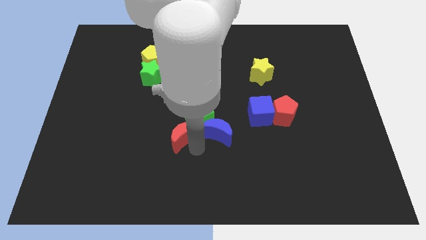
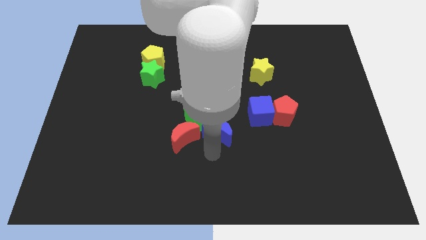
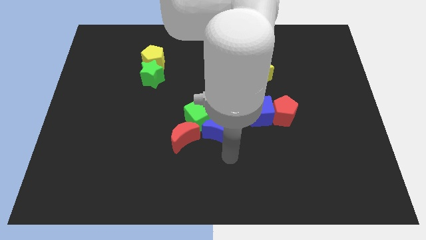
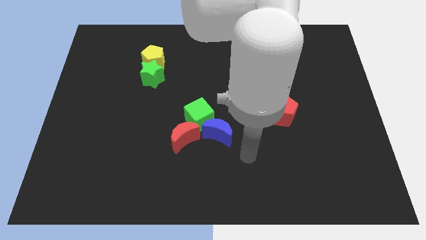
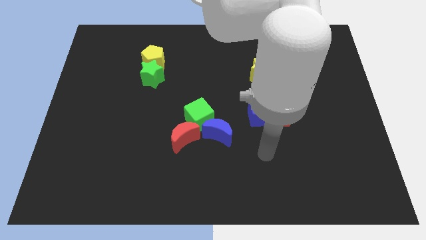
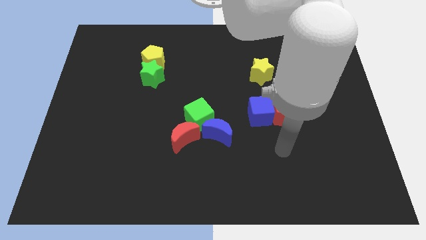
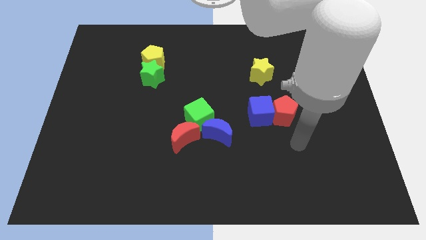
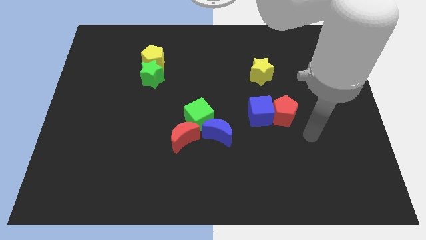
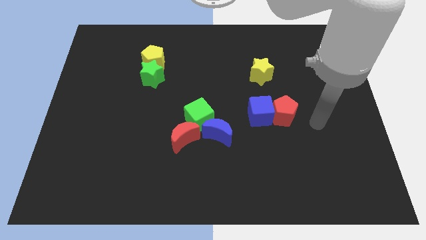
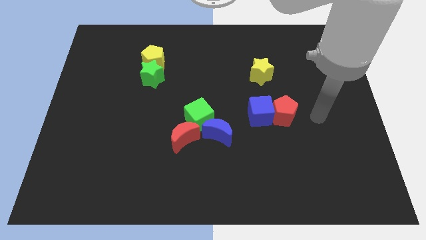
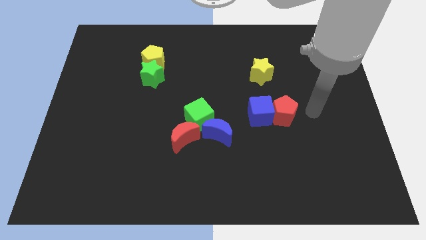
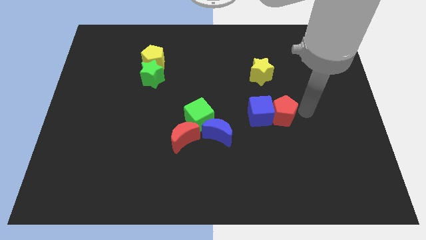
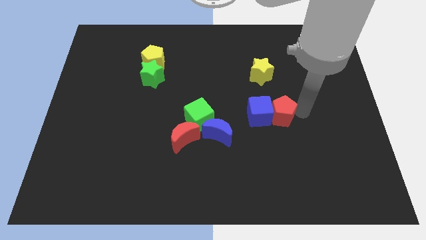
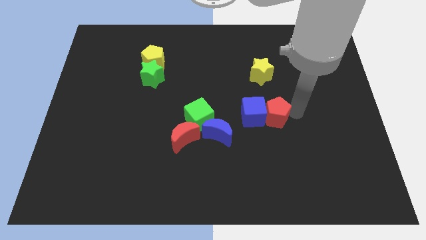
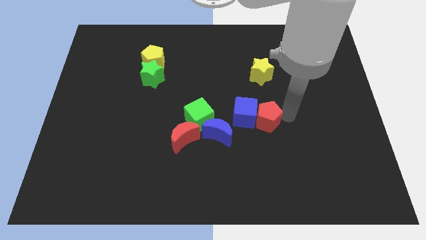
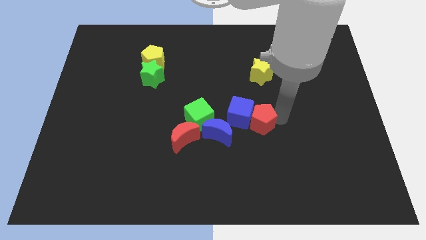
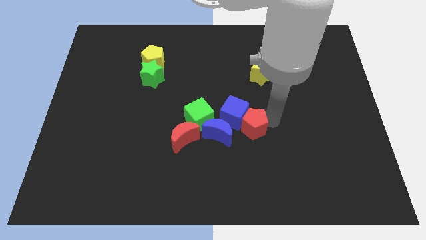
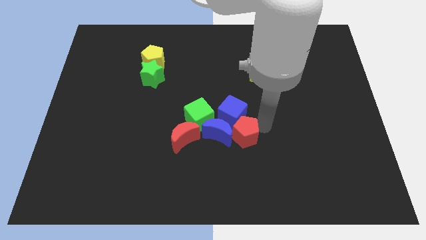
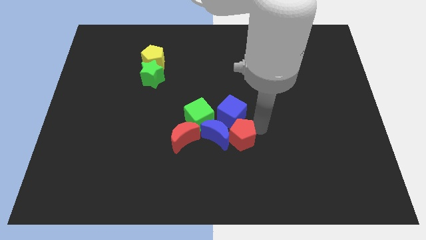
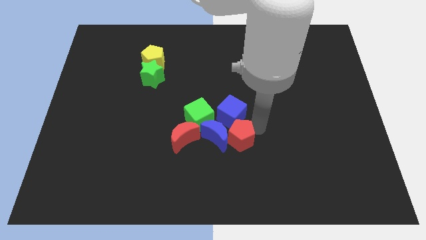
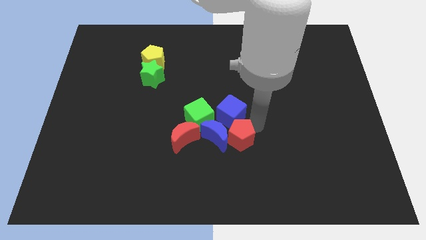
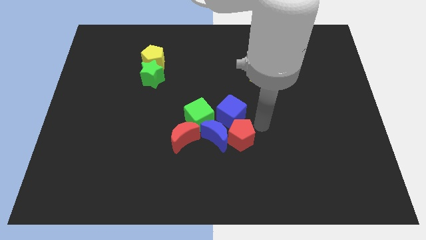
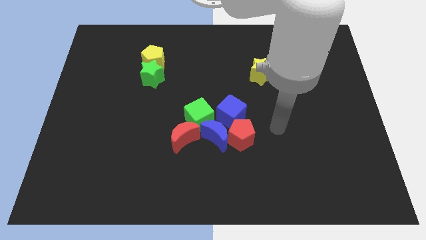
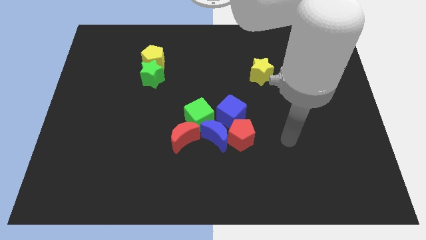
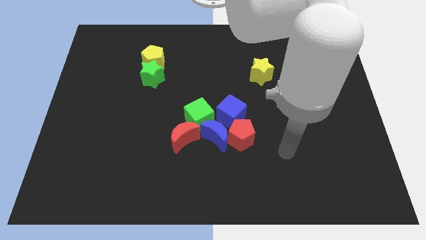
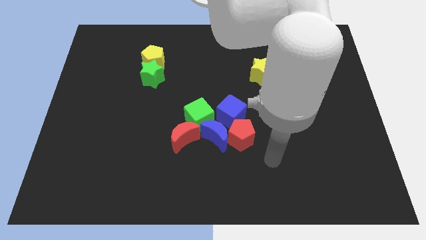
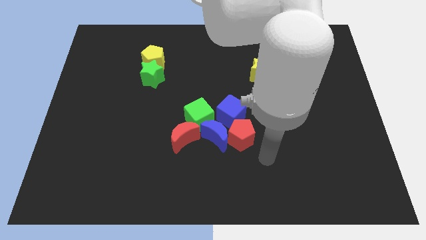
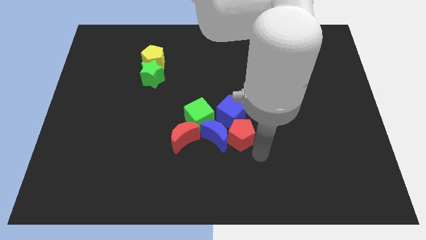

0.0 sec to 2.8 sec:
push blue cube and red pentagon into group of blocks

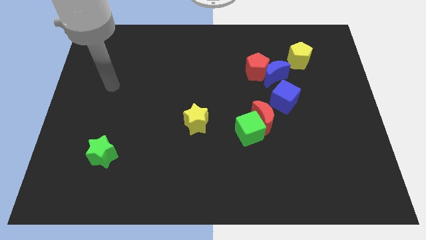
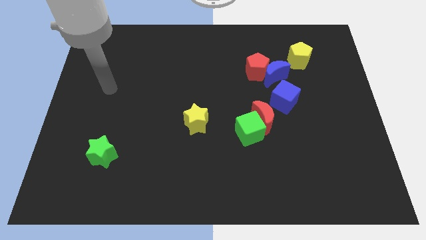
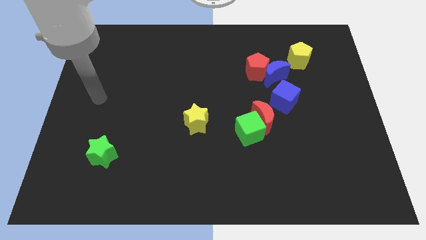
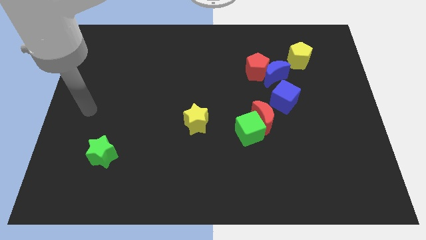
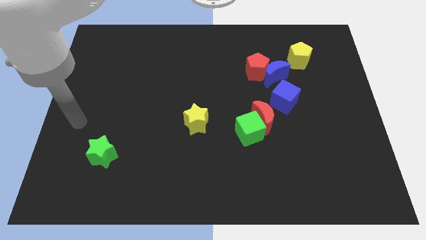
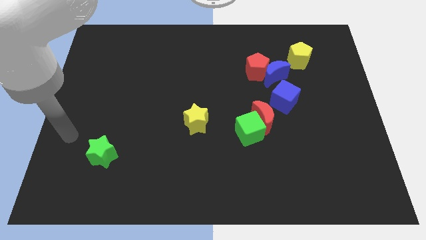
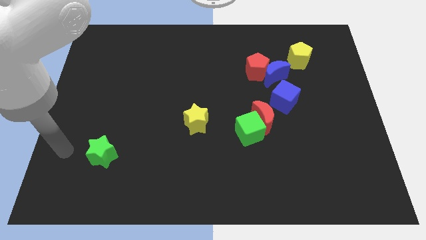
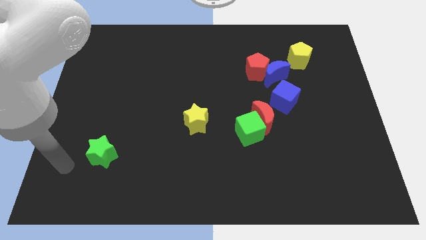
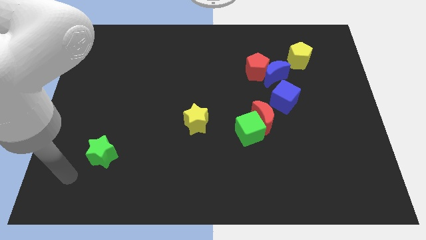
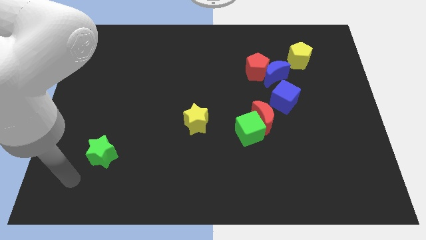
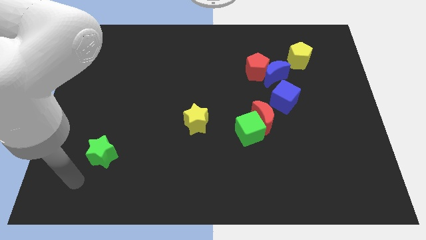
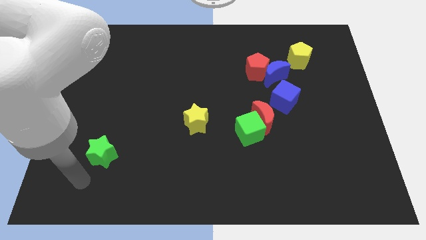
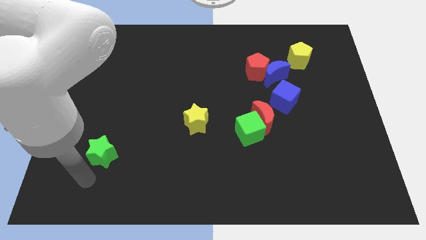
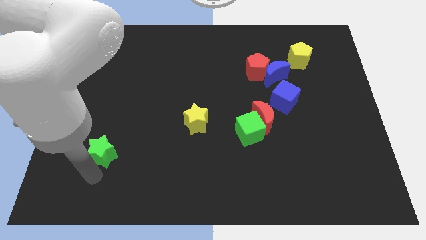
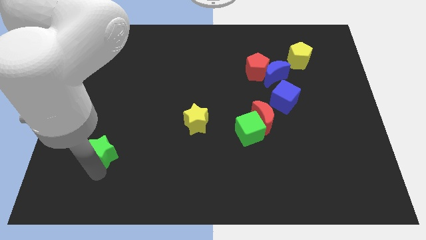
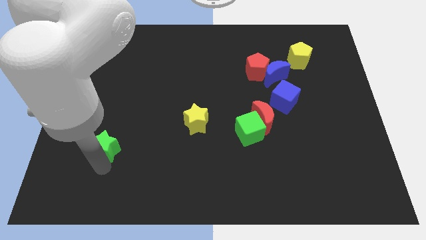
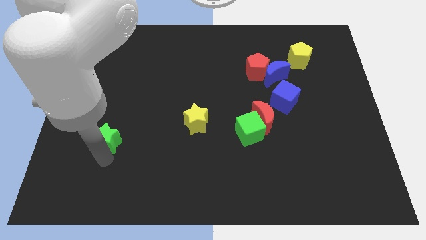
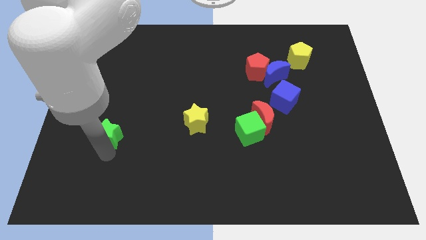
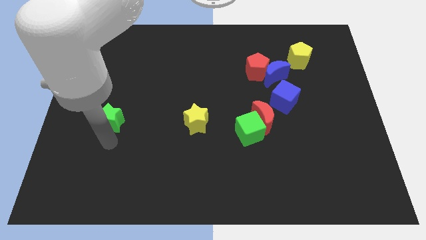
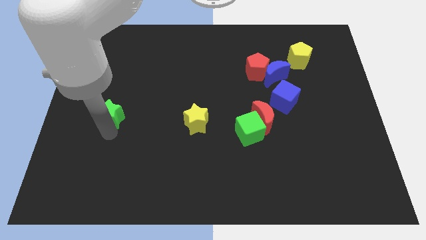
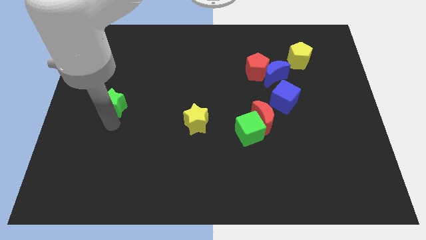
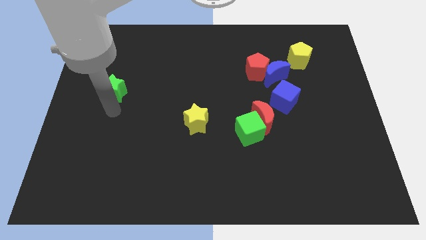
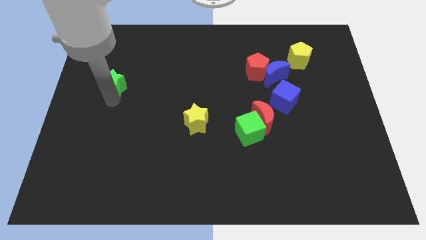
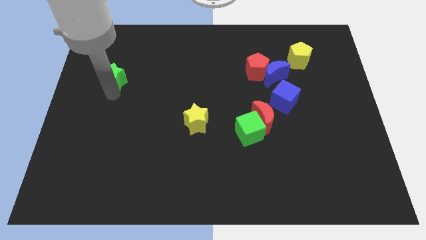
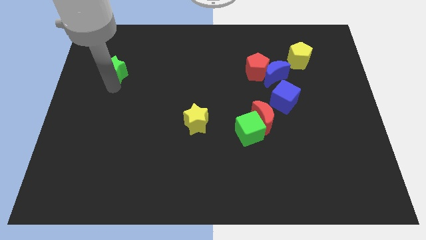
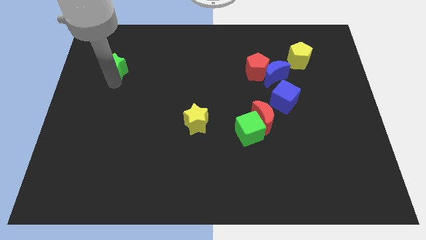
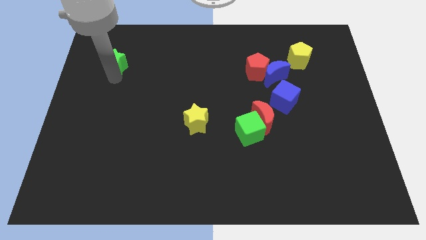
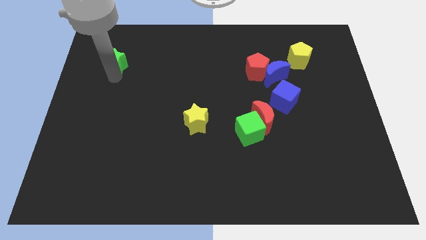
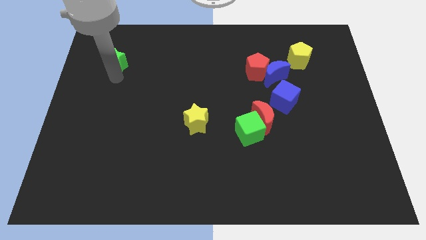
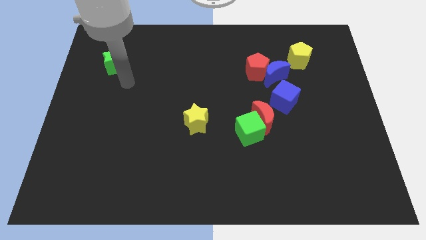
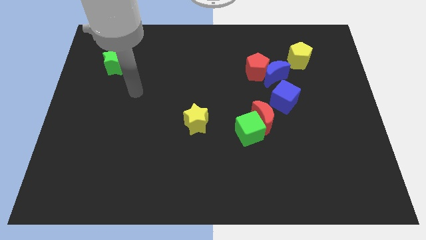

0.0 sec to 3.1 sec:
move the green star to the top side

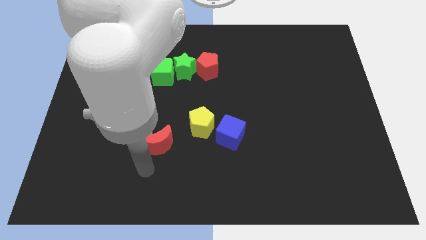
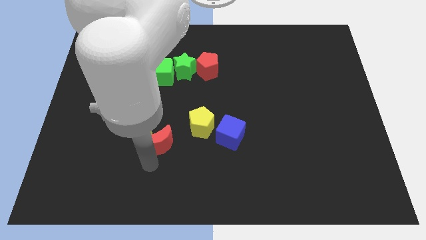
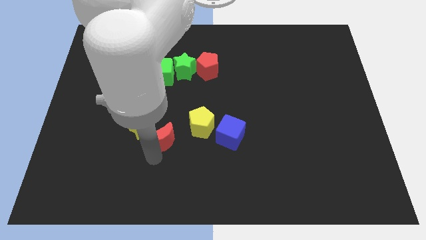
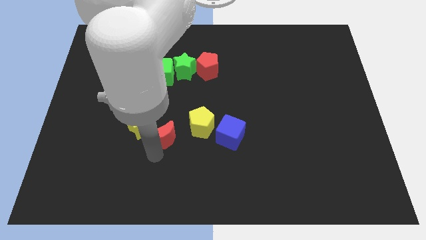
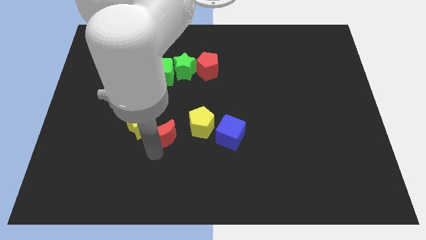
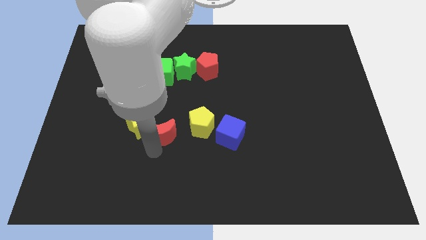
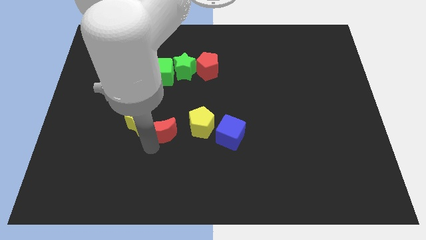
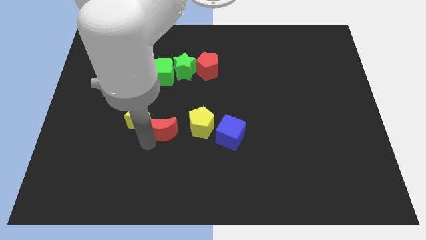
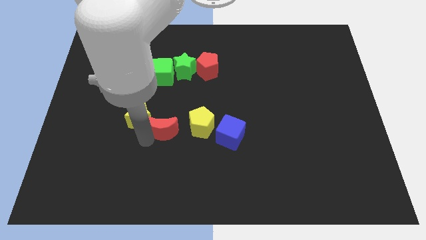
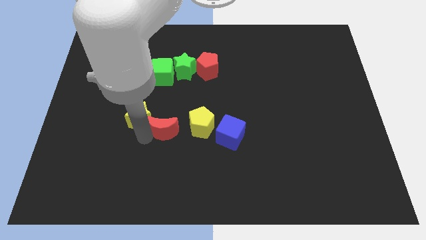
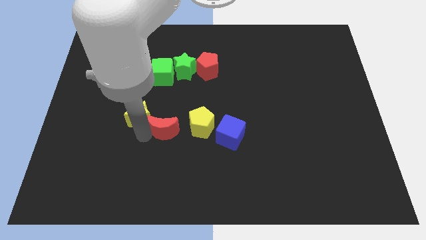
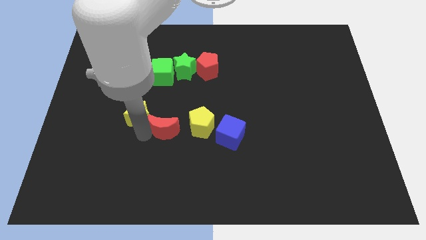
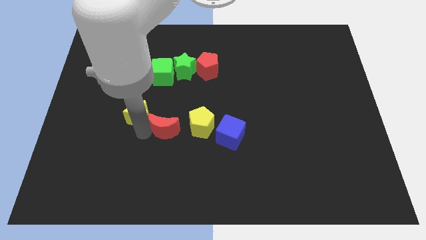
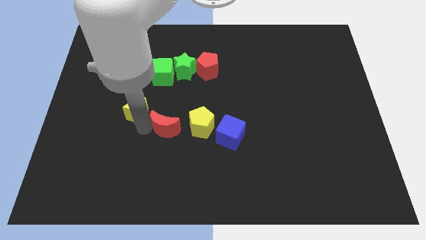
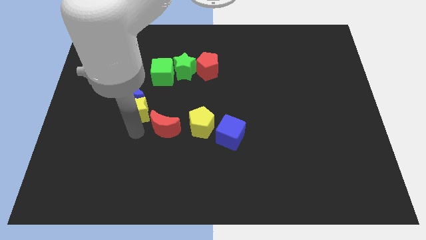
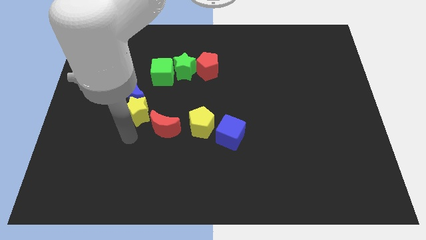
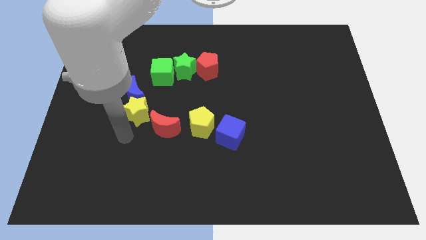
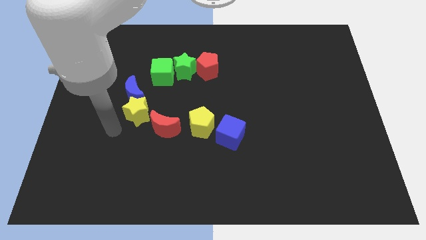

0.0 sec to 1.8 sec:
move the red crescent to the top

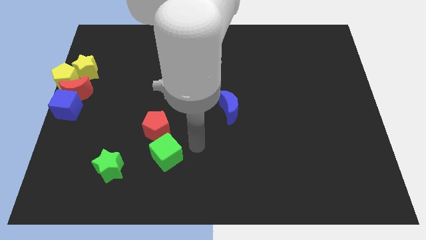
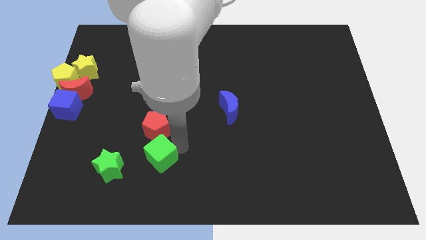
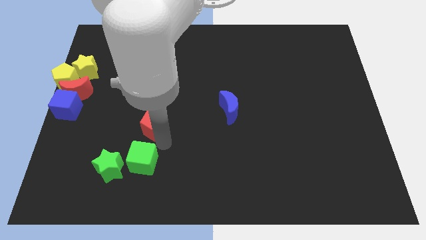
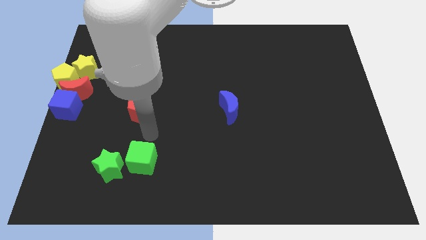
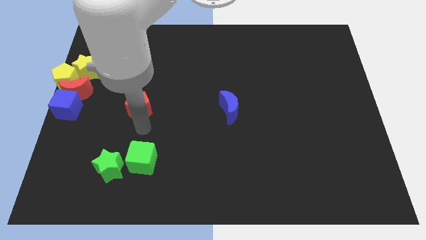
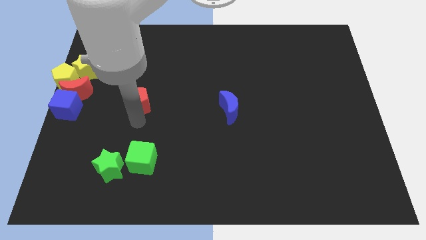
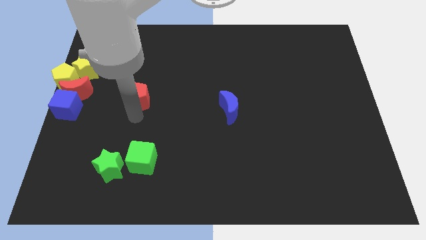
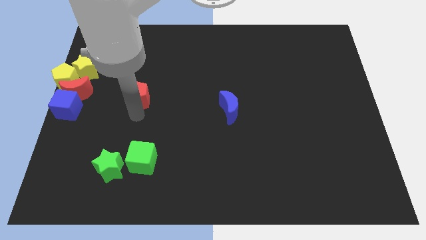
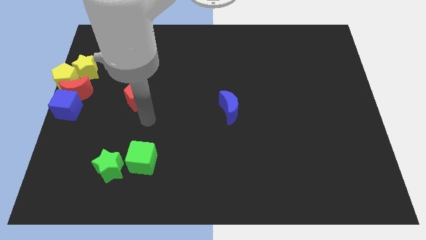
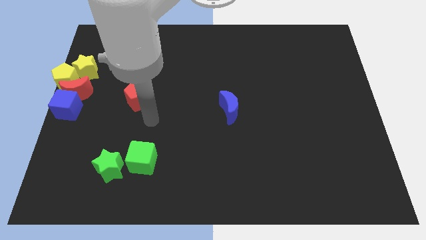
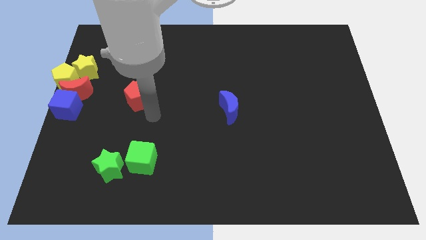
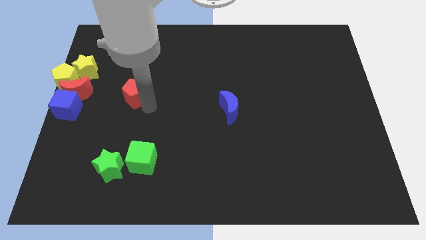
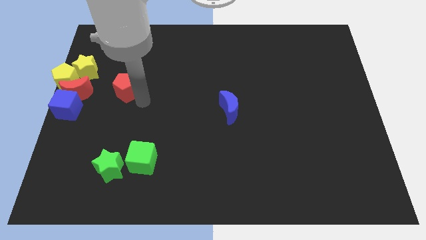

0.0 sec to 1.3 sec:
push the red pentagon to the right of the red moon
